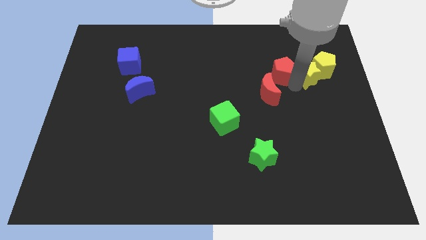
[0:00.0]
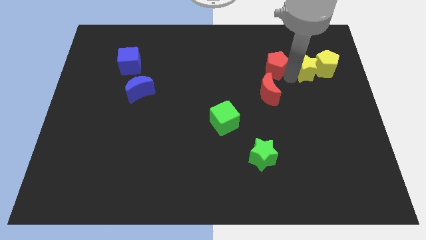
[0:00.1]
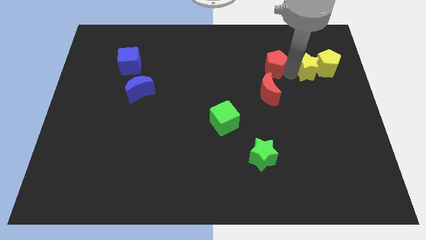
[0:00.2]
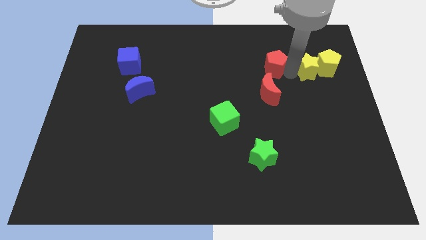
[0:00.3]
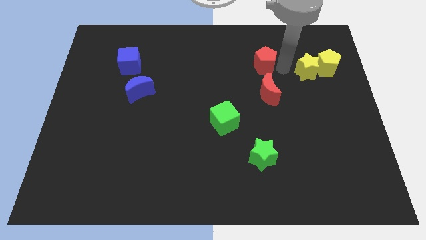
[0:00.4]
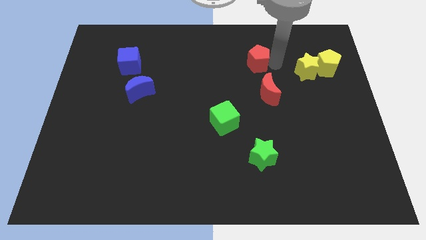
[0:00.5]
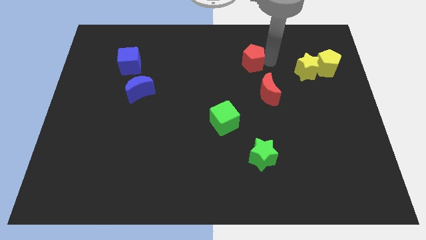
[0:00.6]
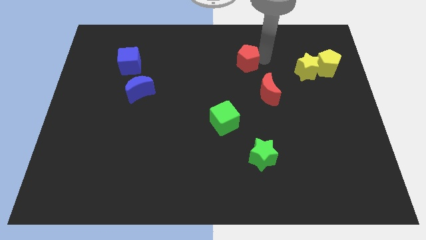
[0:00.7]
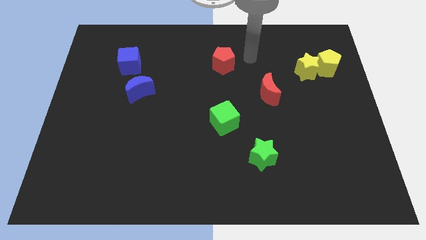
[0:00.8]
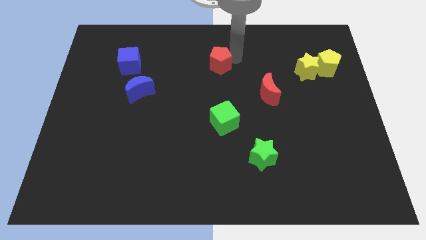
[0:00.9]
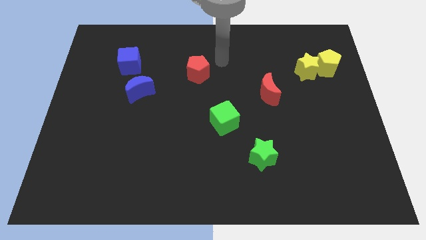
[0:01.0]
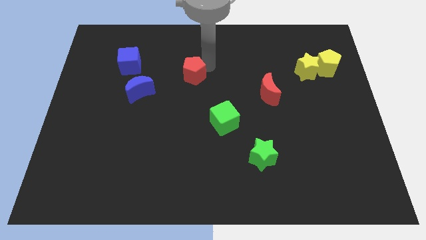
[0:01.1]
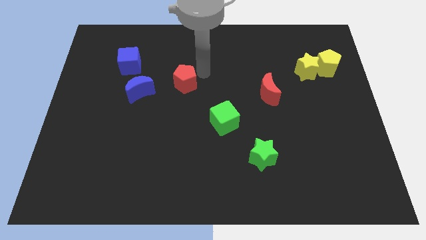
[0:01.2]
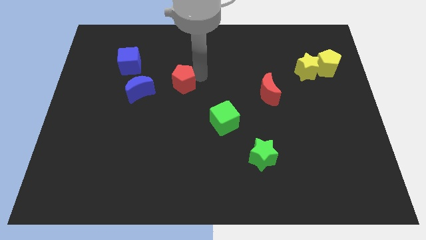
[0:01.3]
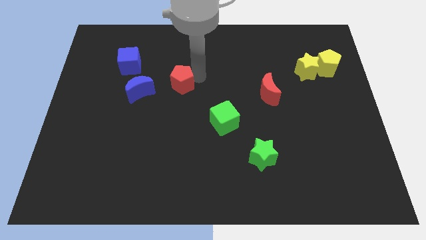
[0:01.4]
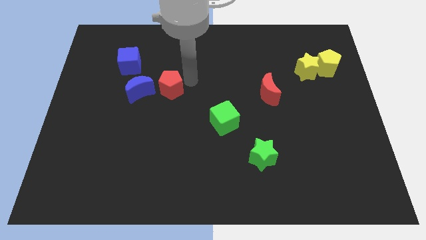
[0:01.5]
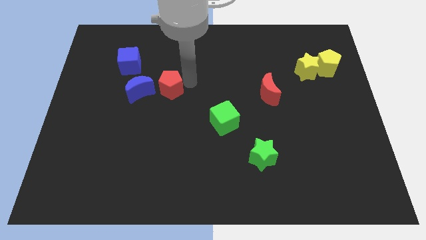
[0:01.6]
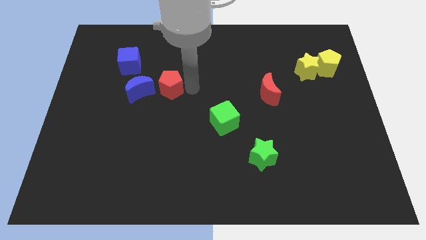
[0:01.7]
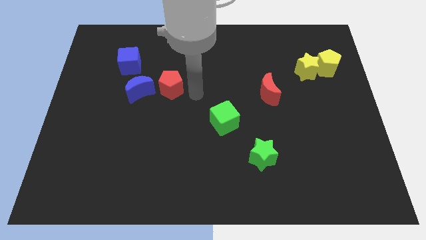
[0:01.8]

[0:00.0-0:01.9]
move the red pentagon towards blue crescent

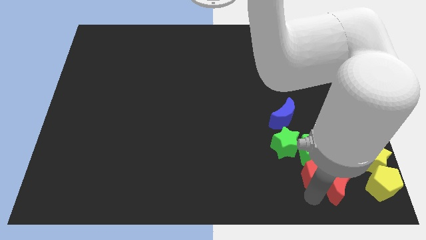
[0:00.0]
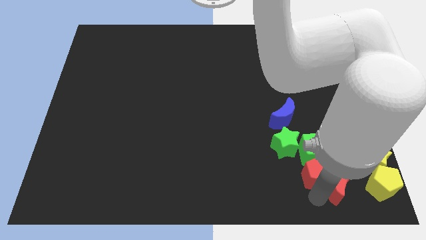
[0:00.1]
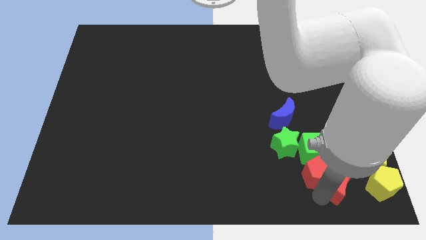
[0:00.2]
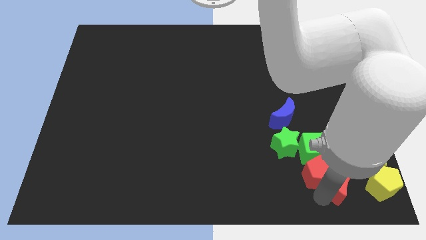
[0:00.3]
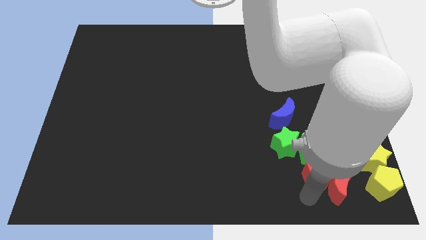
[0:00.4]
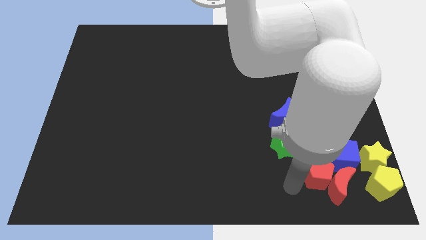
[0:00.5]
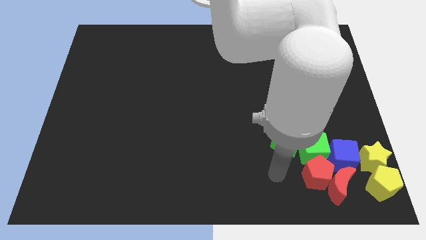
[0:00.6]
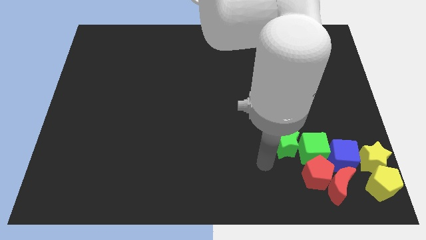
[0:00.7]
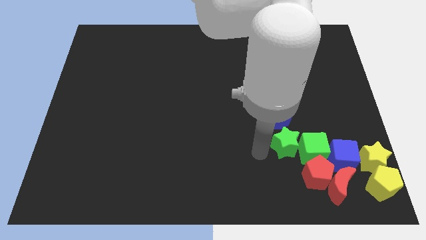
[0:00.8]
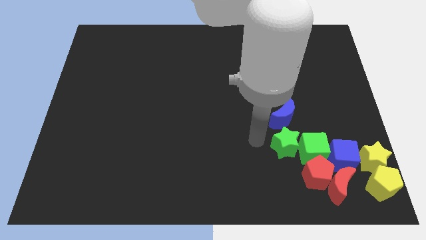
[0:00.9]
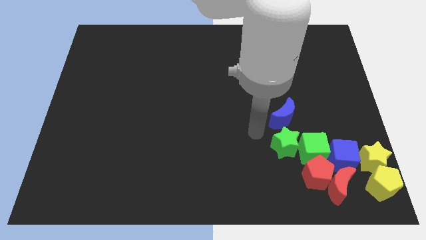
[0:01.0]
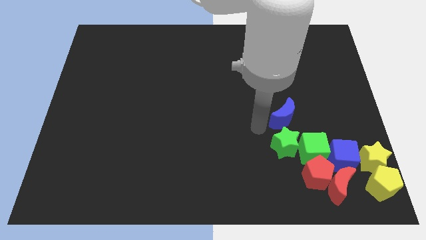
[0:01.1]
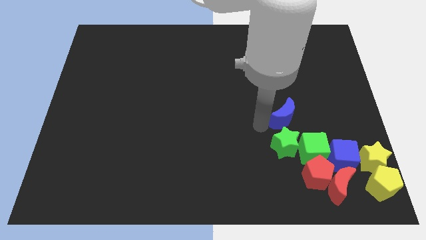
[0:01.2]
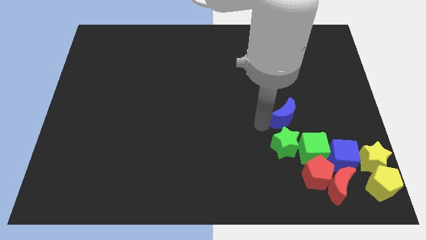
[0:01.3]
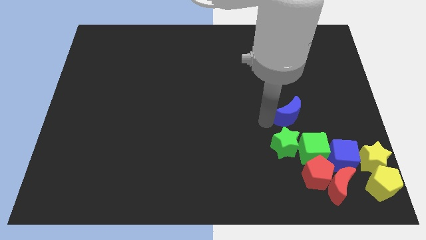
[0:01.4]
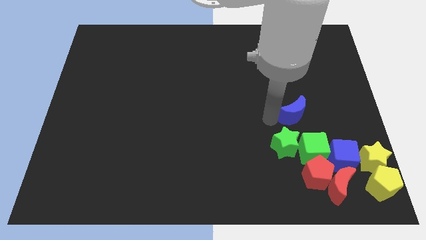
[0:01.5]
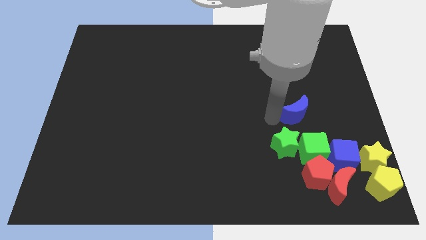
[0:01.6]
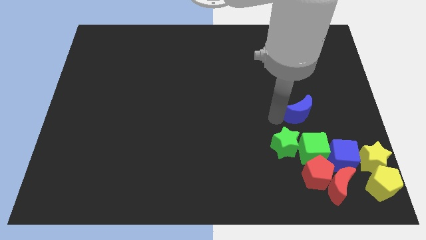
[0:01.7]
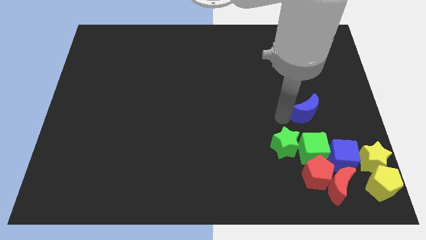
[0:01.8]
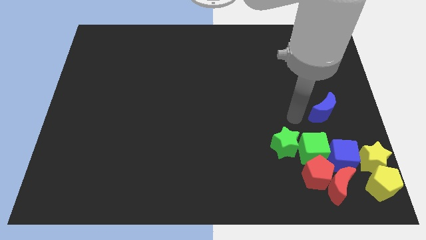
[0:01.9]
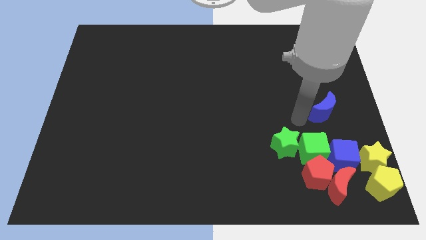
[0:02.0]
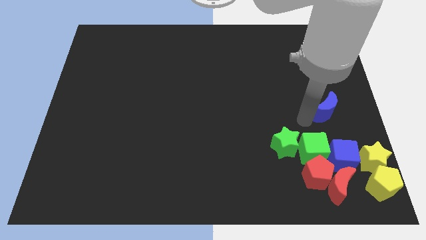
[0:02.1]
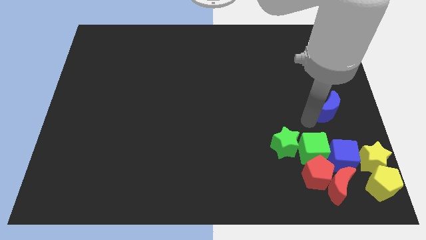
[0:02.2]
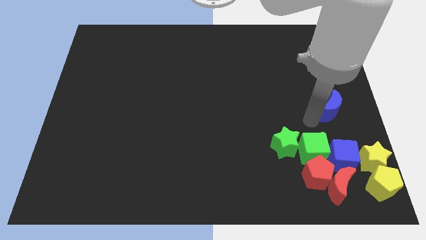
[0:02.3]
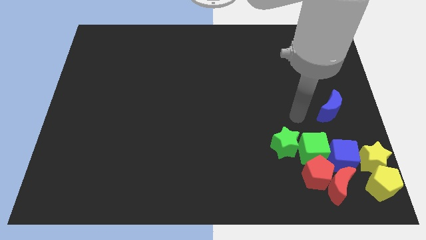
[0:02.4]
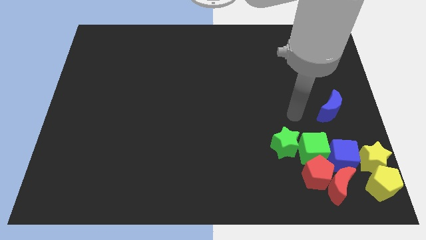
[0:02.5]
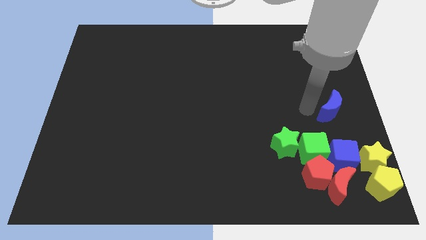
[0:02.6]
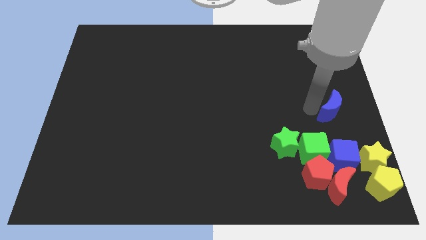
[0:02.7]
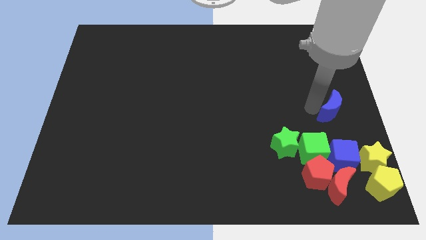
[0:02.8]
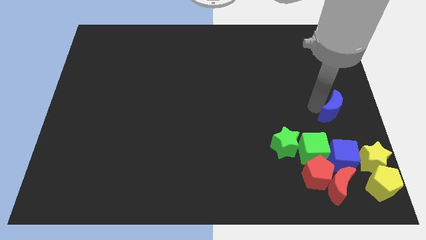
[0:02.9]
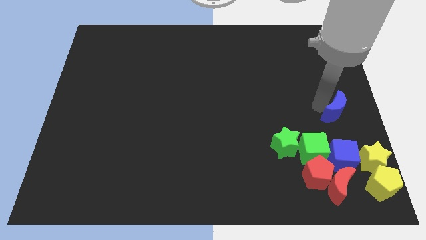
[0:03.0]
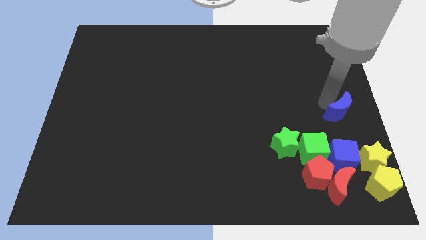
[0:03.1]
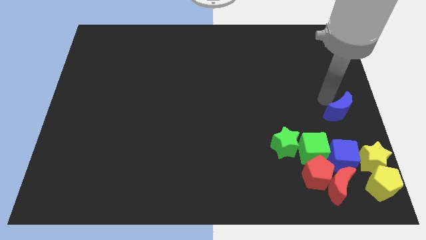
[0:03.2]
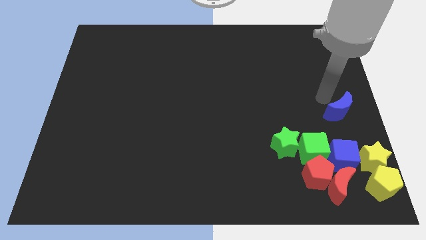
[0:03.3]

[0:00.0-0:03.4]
move the blue crescent vertically to the top of the blue cube

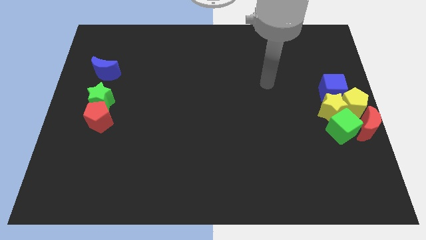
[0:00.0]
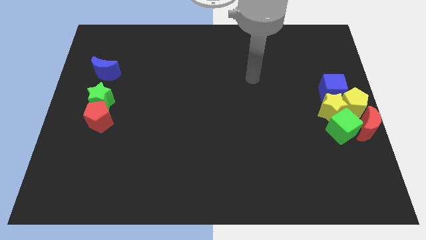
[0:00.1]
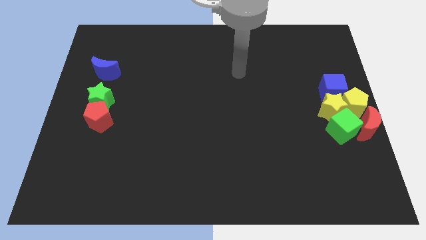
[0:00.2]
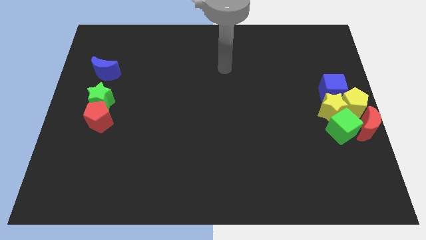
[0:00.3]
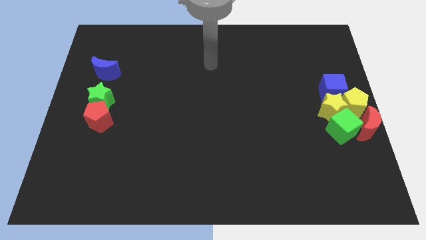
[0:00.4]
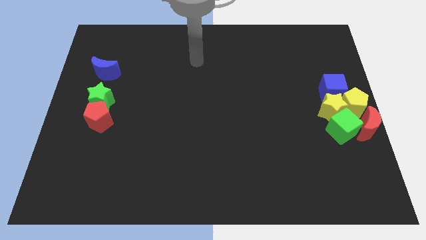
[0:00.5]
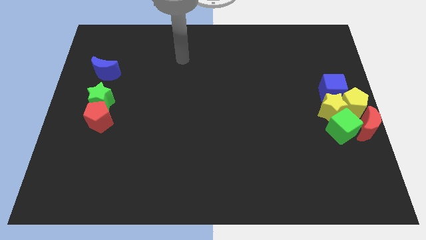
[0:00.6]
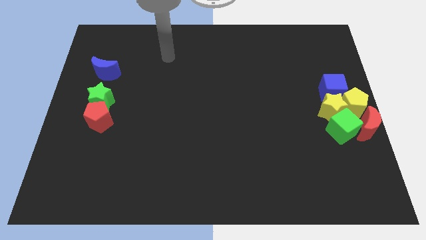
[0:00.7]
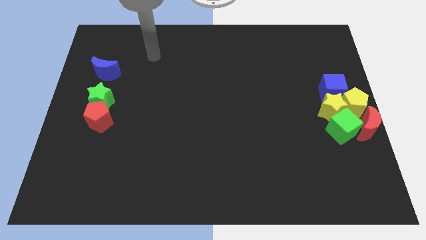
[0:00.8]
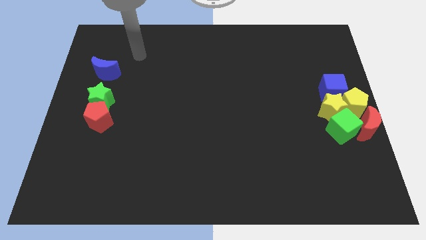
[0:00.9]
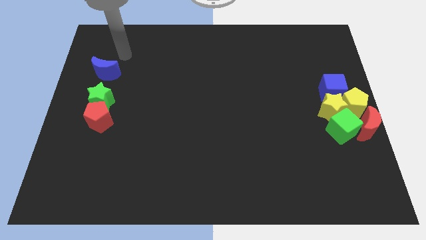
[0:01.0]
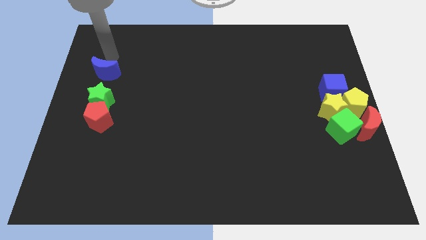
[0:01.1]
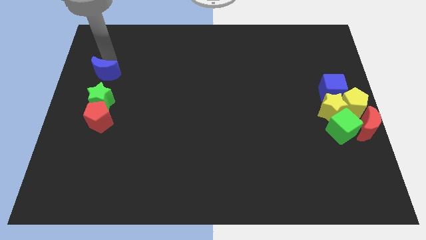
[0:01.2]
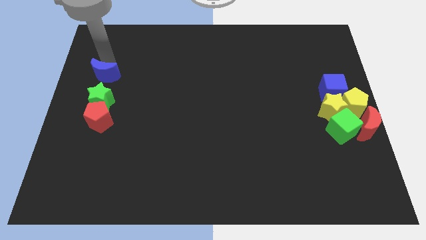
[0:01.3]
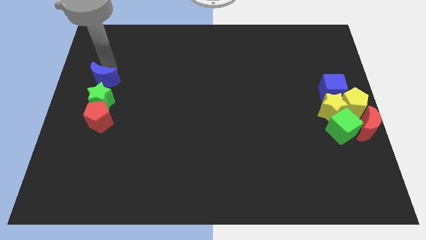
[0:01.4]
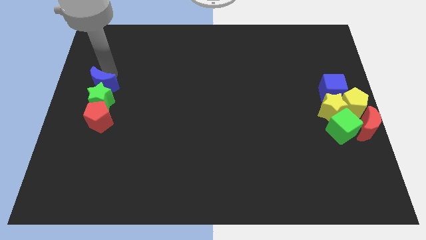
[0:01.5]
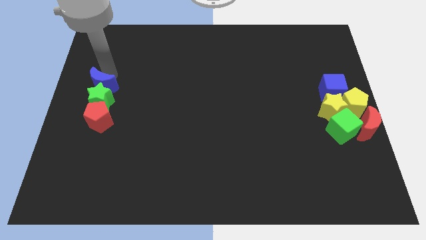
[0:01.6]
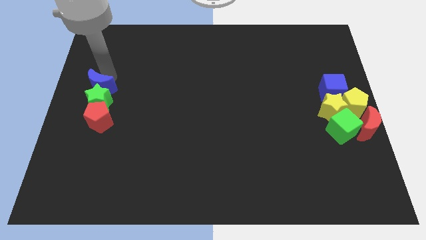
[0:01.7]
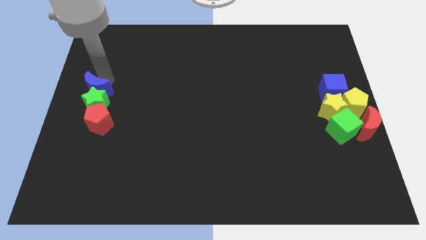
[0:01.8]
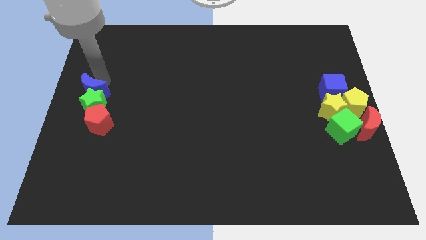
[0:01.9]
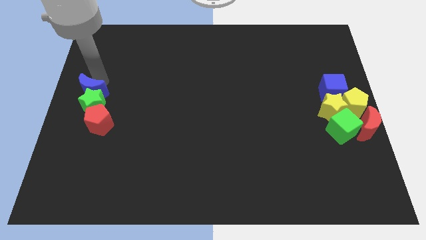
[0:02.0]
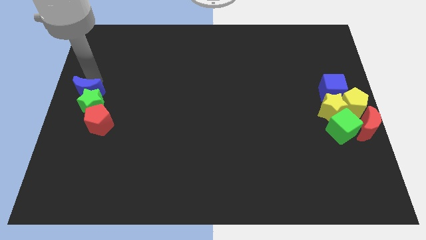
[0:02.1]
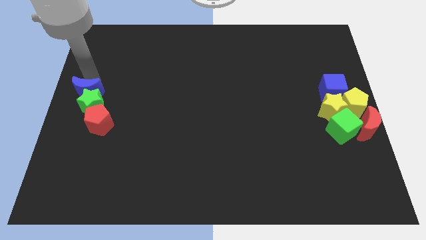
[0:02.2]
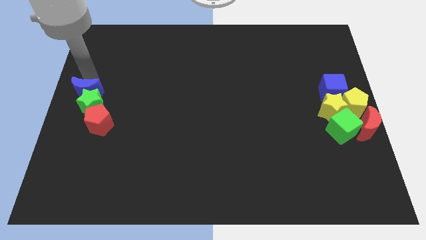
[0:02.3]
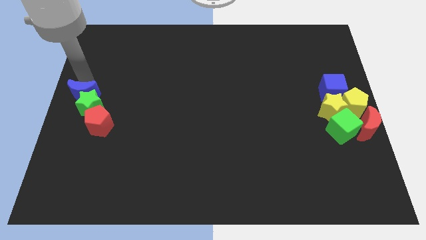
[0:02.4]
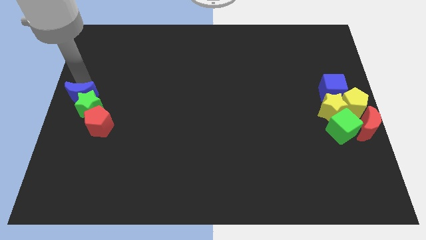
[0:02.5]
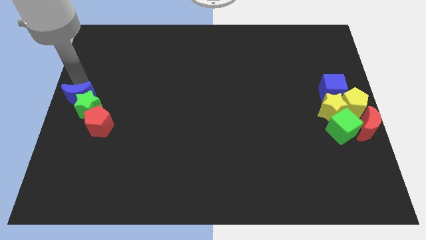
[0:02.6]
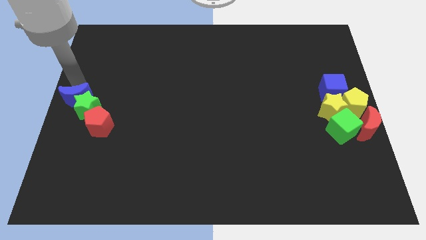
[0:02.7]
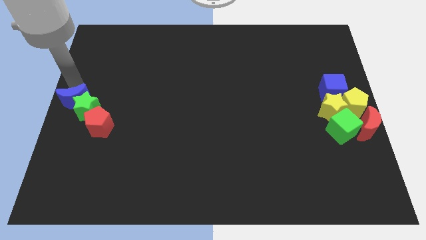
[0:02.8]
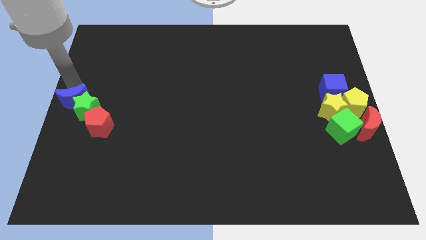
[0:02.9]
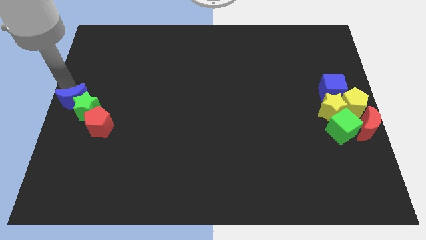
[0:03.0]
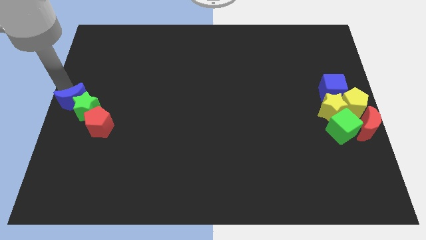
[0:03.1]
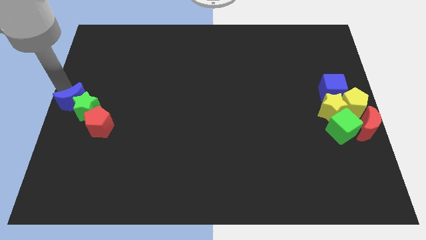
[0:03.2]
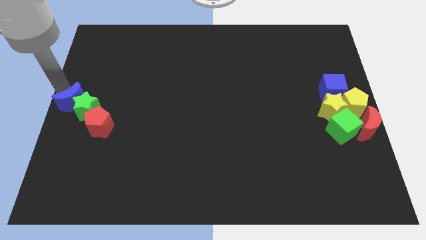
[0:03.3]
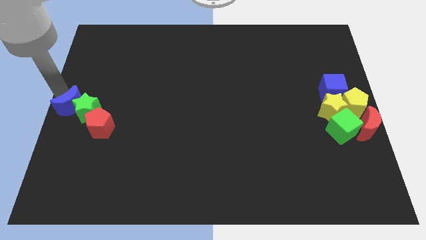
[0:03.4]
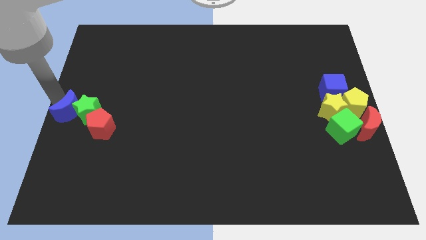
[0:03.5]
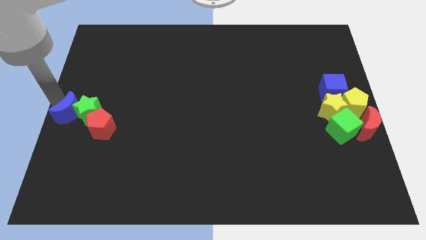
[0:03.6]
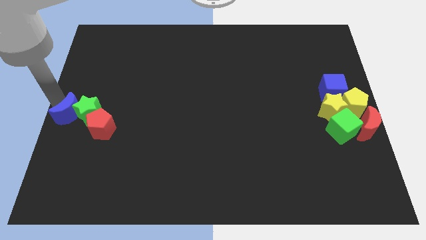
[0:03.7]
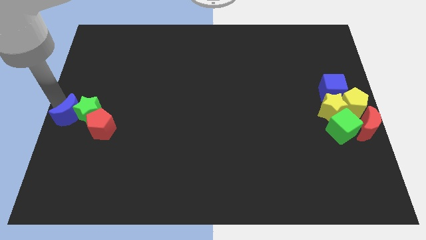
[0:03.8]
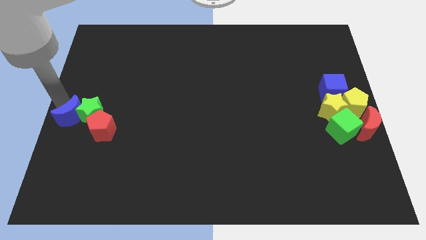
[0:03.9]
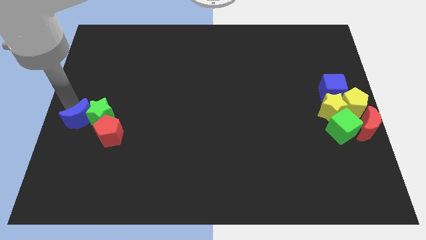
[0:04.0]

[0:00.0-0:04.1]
move the blue moon towards the center left of the board
